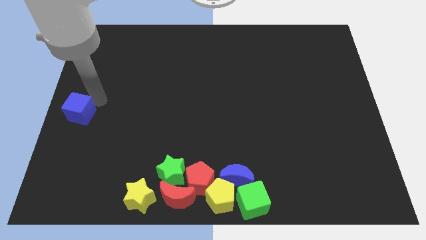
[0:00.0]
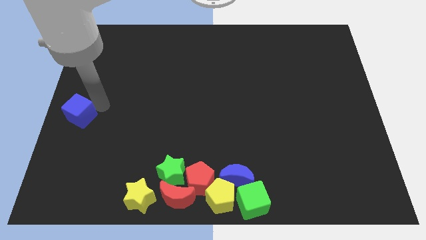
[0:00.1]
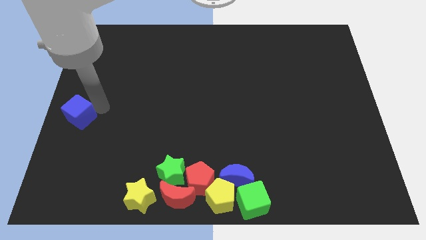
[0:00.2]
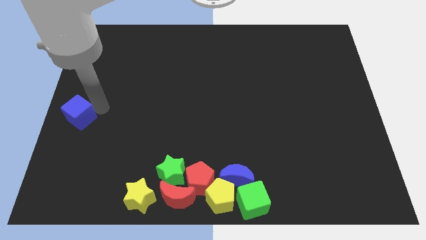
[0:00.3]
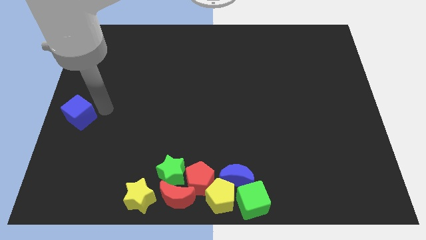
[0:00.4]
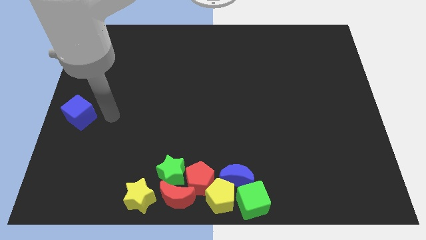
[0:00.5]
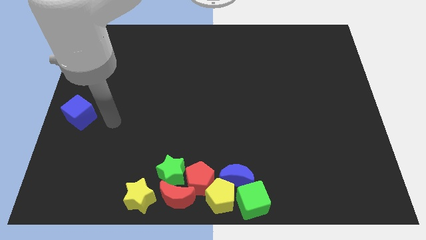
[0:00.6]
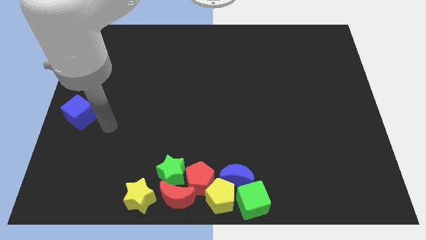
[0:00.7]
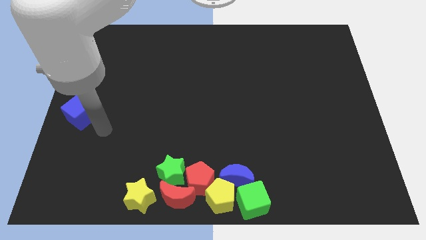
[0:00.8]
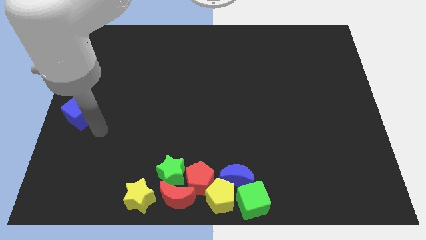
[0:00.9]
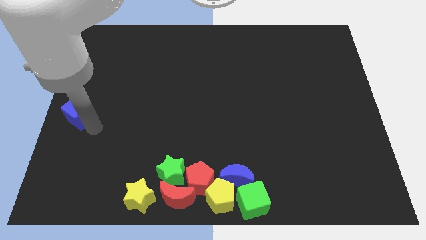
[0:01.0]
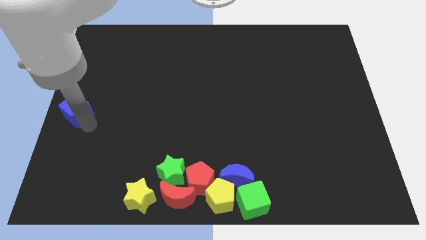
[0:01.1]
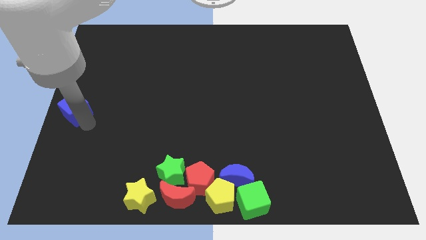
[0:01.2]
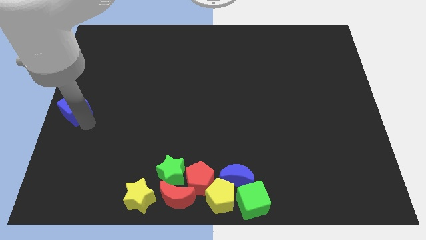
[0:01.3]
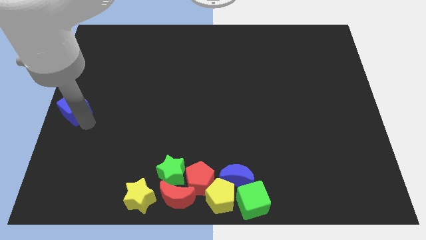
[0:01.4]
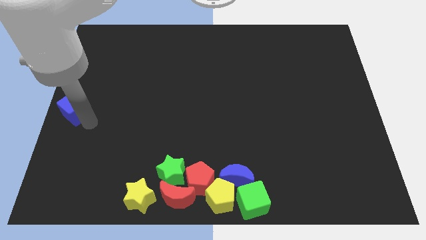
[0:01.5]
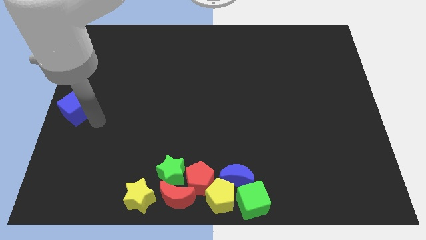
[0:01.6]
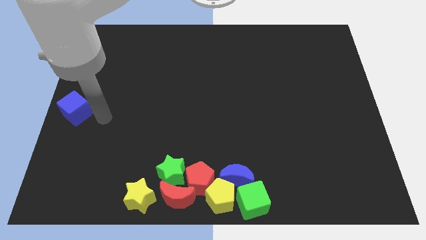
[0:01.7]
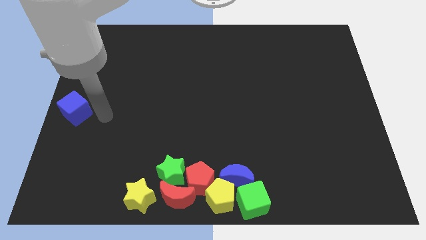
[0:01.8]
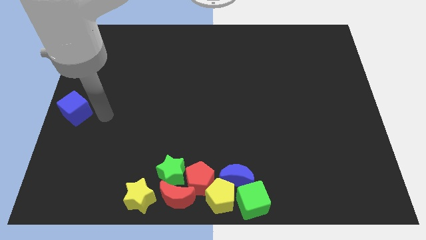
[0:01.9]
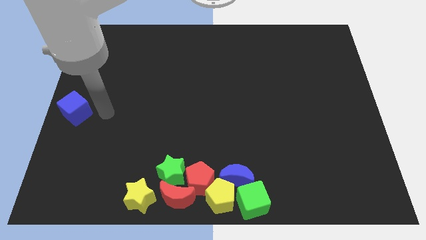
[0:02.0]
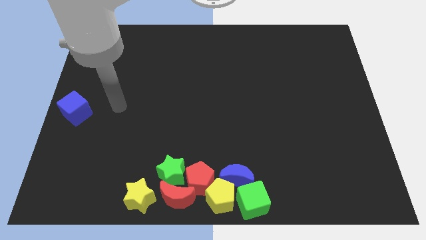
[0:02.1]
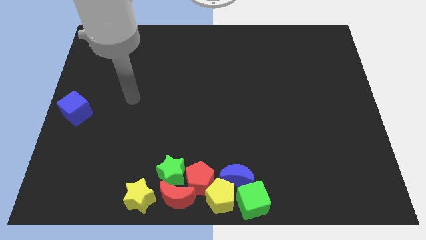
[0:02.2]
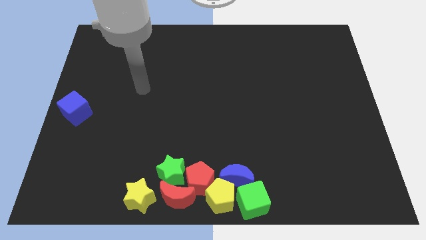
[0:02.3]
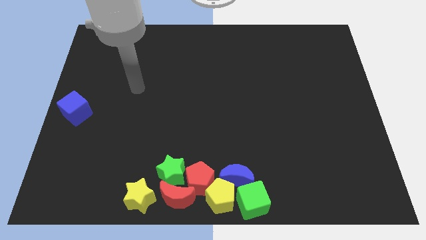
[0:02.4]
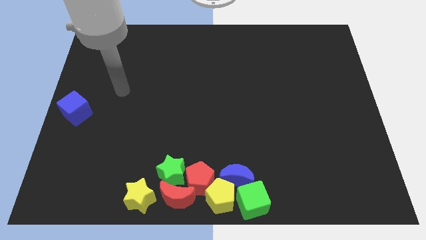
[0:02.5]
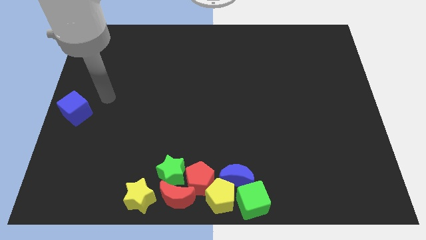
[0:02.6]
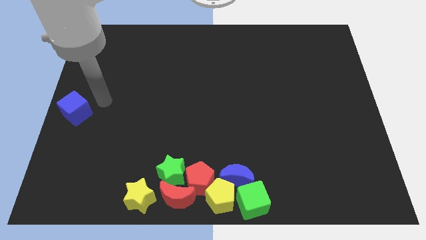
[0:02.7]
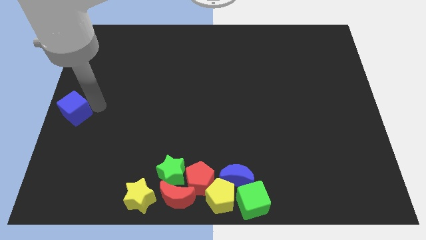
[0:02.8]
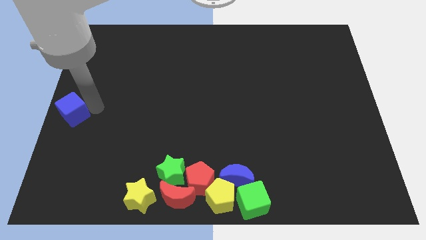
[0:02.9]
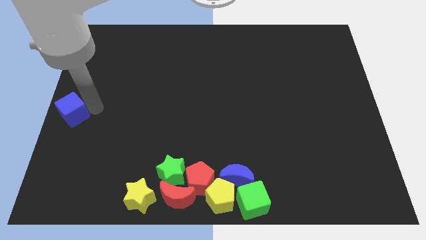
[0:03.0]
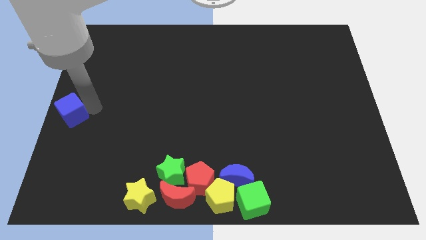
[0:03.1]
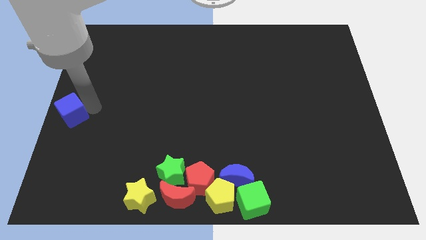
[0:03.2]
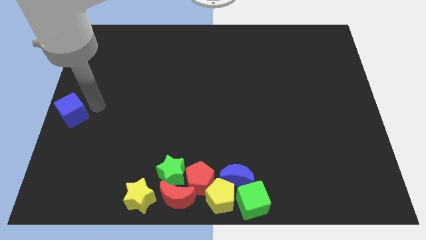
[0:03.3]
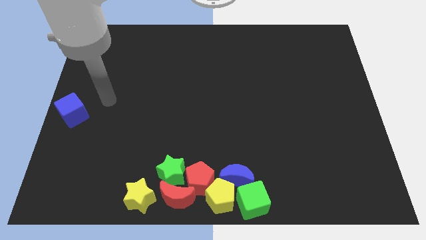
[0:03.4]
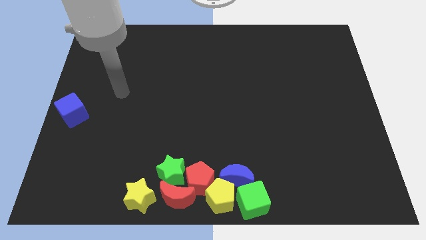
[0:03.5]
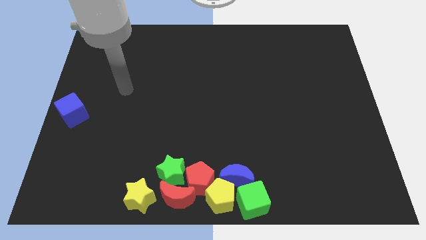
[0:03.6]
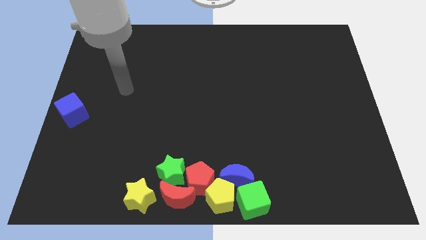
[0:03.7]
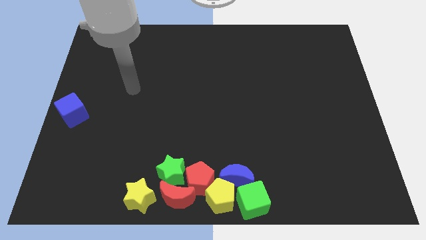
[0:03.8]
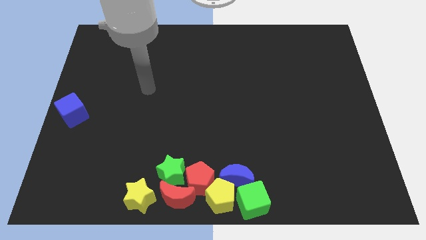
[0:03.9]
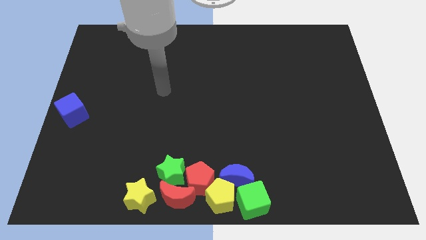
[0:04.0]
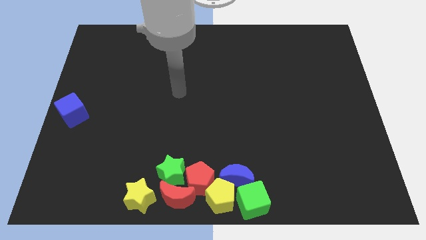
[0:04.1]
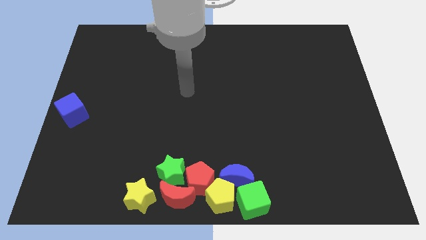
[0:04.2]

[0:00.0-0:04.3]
move the blue cube slightly left

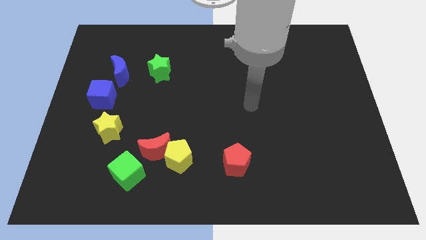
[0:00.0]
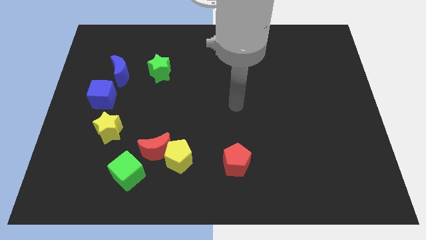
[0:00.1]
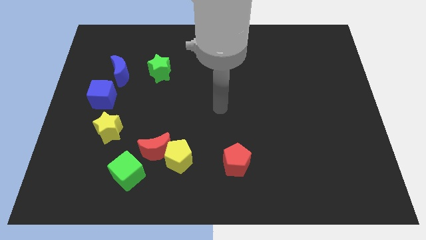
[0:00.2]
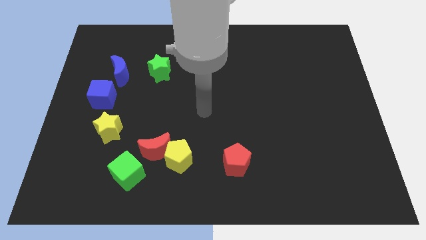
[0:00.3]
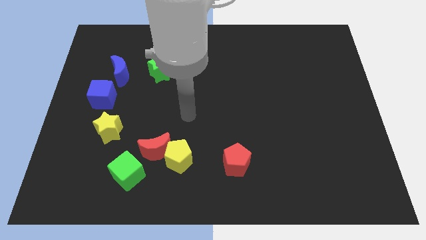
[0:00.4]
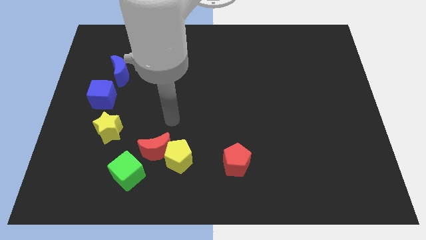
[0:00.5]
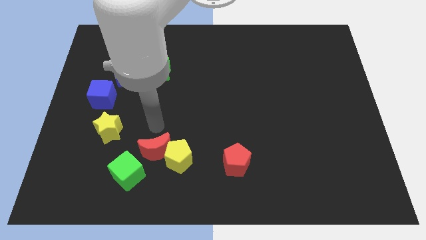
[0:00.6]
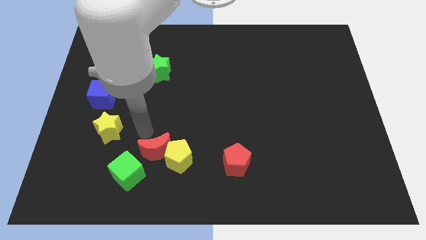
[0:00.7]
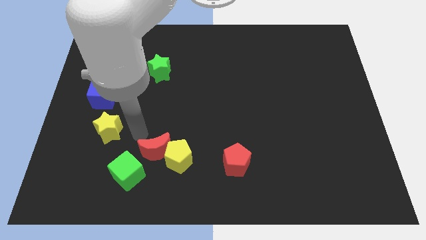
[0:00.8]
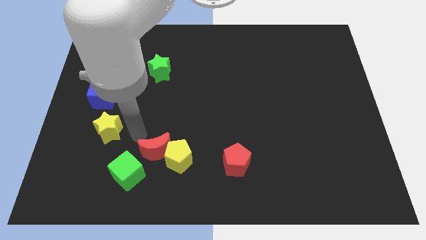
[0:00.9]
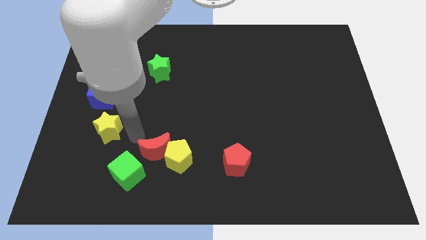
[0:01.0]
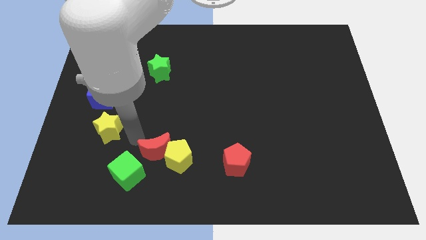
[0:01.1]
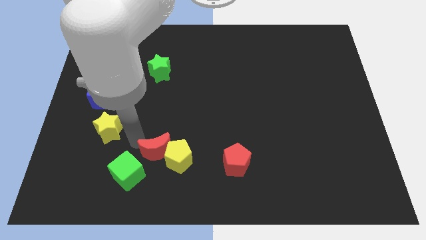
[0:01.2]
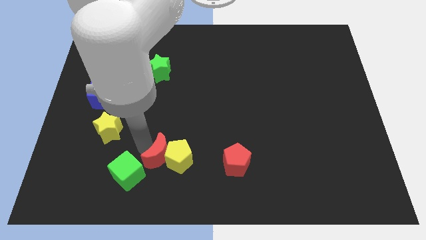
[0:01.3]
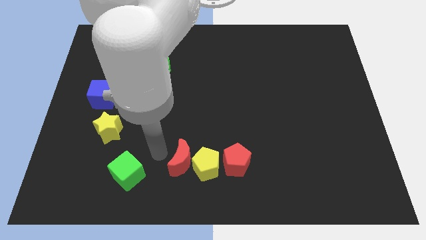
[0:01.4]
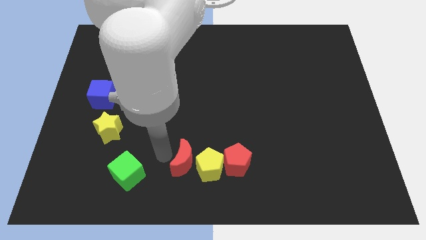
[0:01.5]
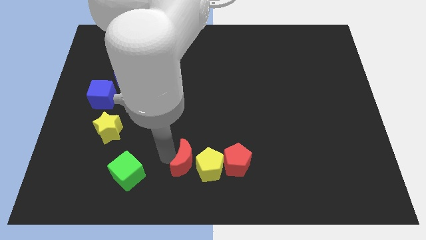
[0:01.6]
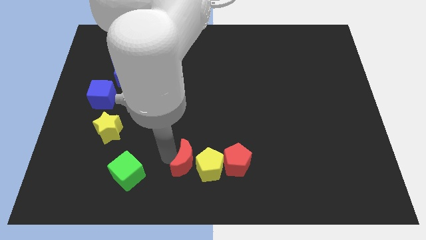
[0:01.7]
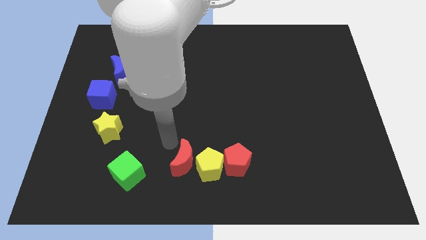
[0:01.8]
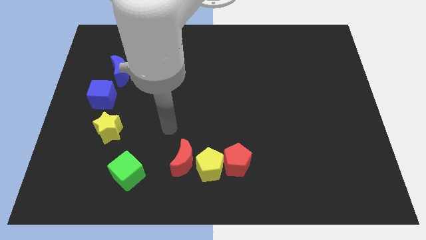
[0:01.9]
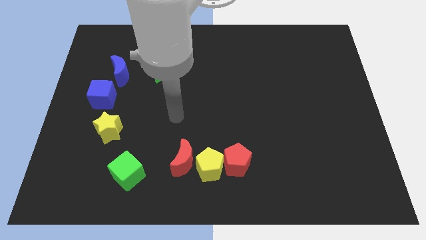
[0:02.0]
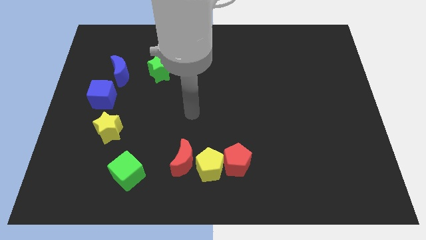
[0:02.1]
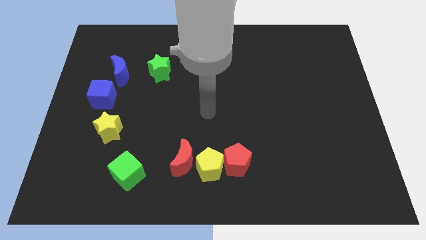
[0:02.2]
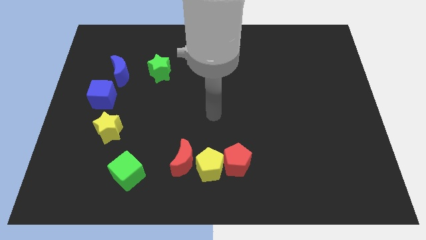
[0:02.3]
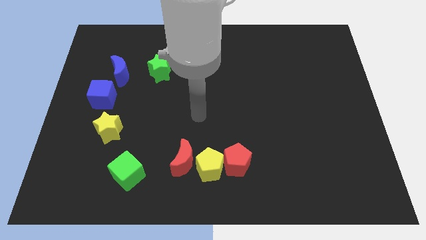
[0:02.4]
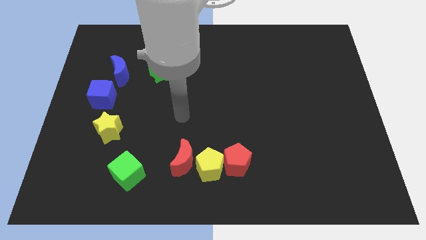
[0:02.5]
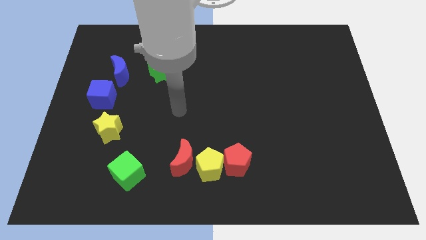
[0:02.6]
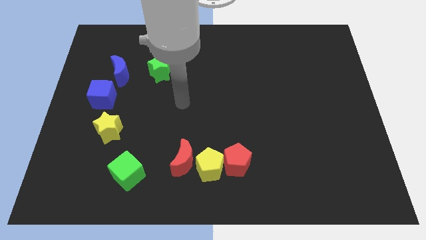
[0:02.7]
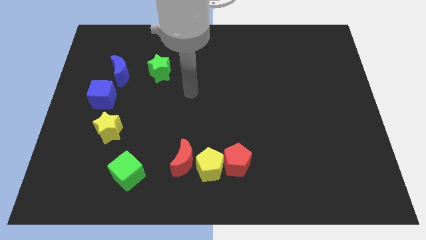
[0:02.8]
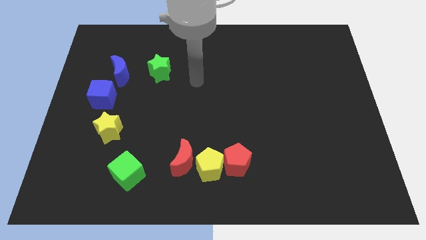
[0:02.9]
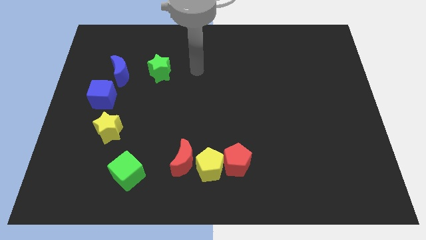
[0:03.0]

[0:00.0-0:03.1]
push the red moon and yellow pentagon close to the red pentagon

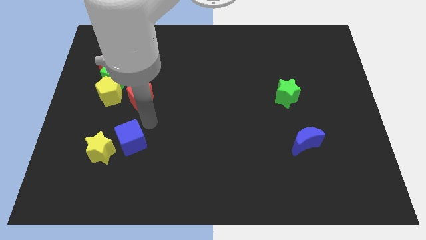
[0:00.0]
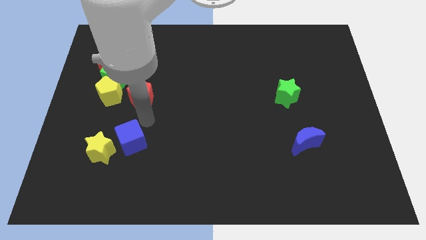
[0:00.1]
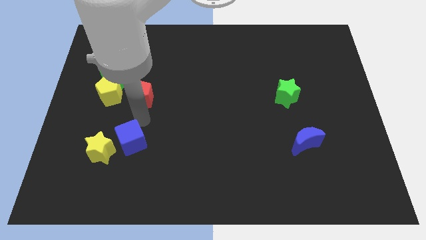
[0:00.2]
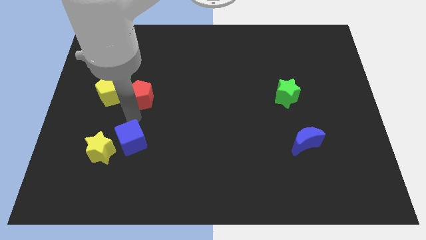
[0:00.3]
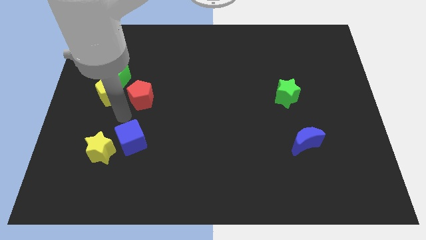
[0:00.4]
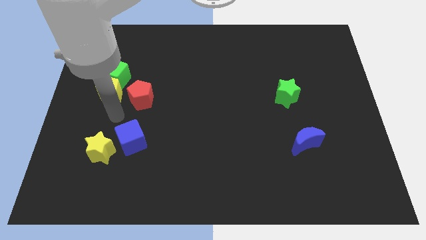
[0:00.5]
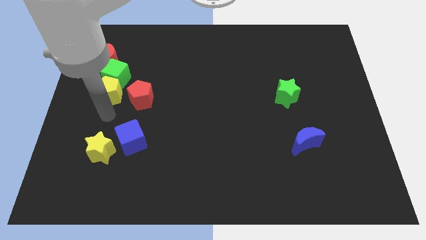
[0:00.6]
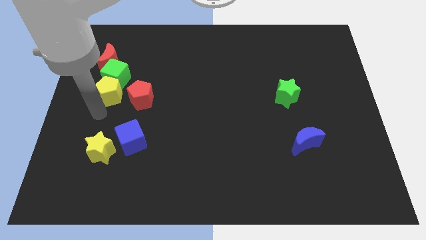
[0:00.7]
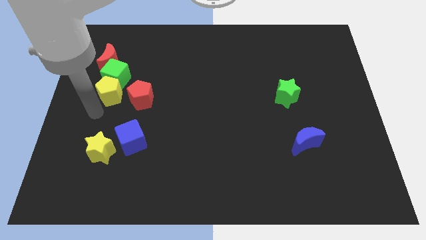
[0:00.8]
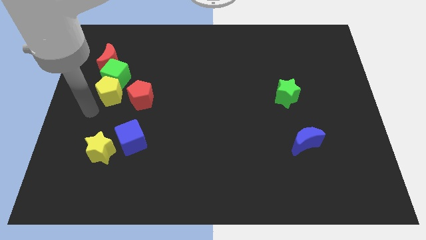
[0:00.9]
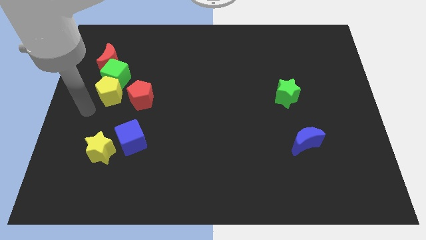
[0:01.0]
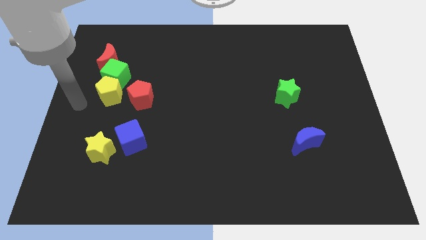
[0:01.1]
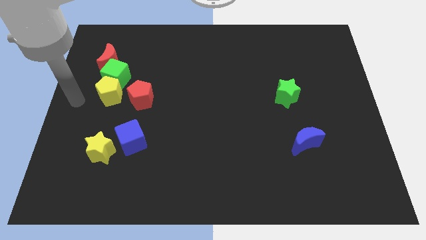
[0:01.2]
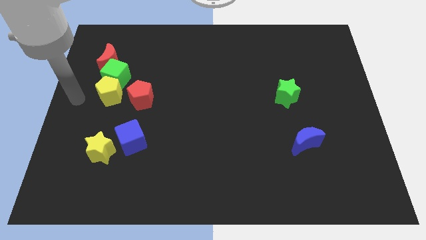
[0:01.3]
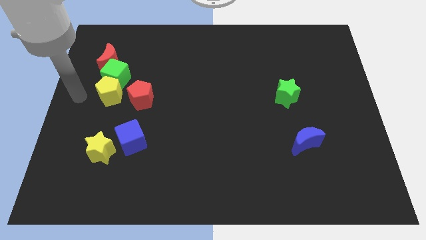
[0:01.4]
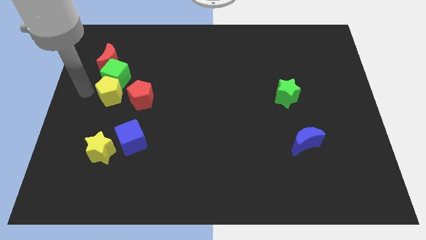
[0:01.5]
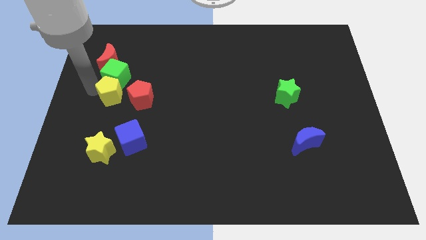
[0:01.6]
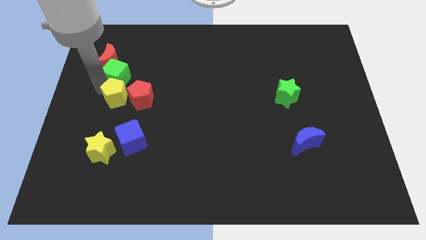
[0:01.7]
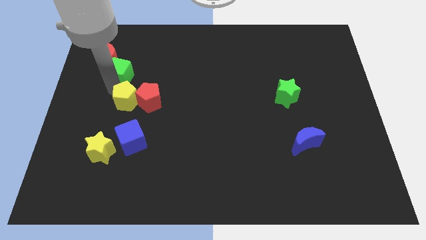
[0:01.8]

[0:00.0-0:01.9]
move the yellow pentagon into the red pentagon
